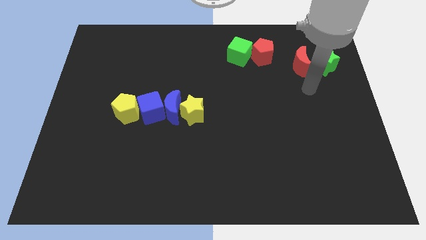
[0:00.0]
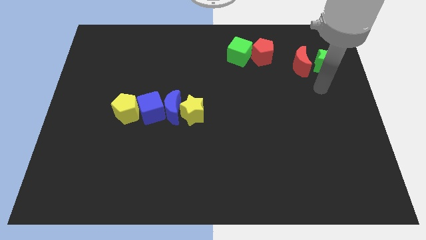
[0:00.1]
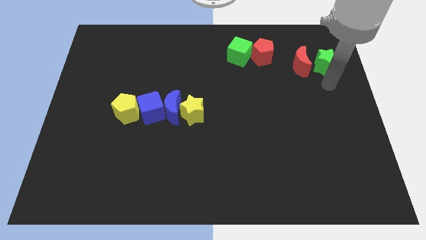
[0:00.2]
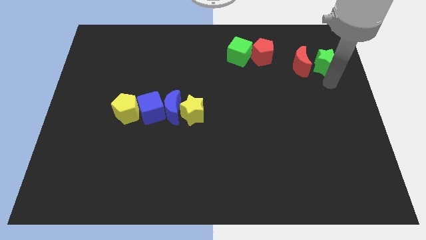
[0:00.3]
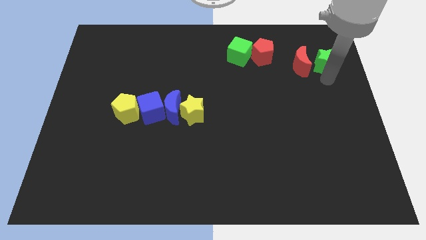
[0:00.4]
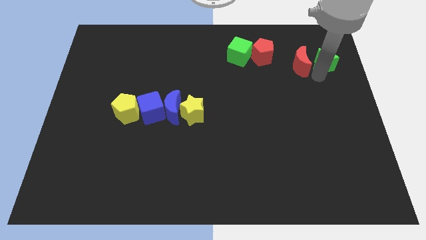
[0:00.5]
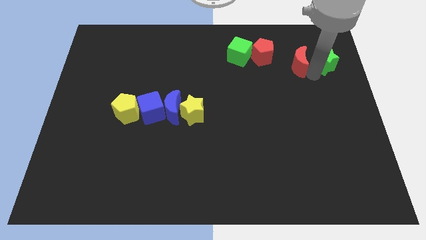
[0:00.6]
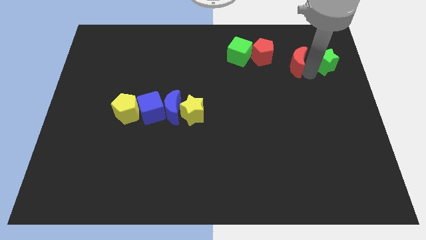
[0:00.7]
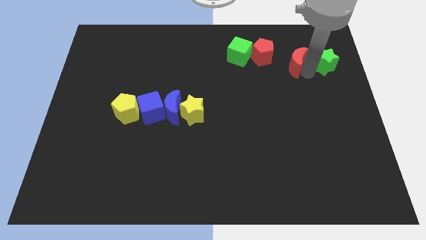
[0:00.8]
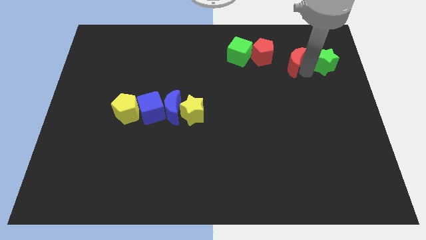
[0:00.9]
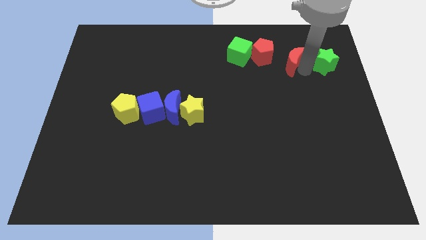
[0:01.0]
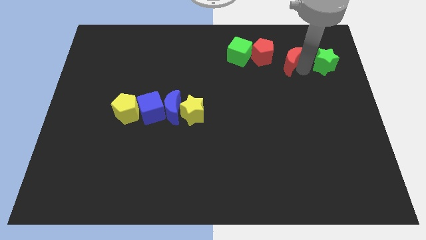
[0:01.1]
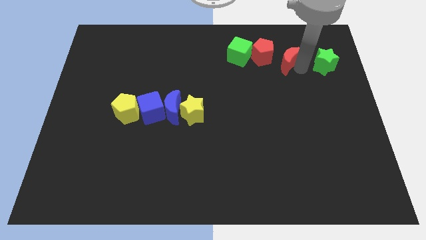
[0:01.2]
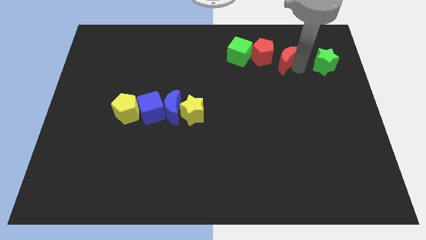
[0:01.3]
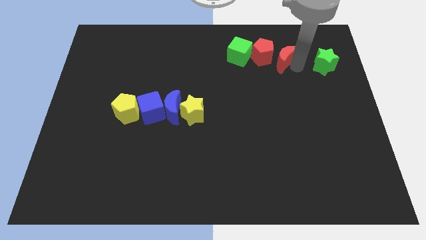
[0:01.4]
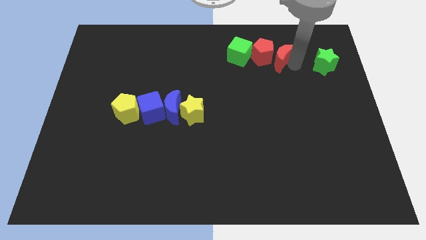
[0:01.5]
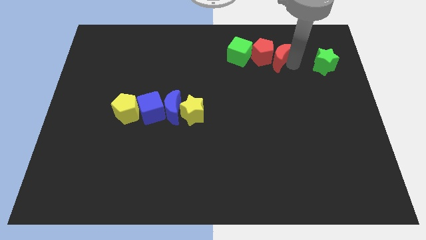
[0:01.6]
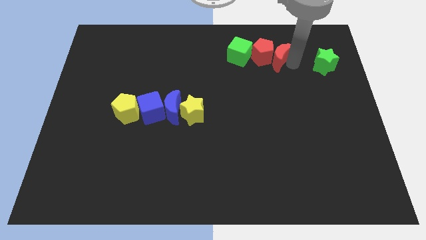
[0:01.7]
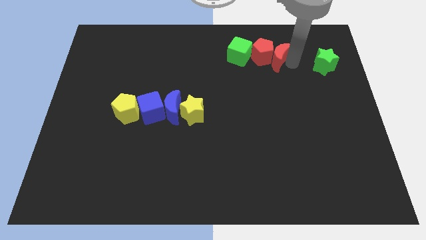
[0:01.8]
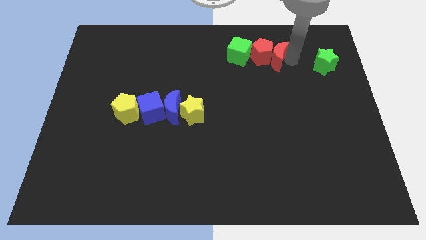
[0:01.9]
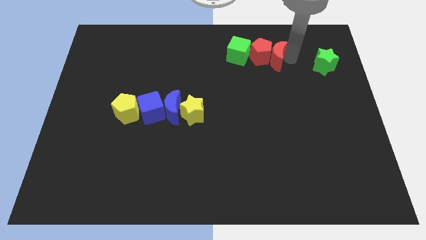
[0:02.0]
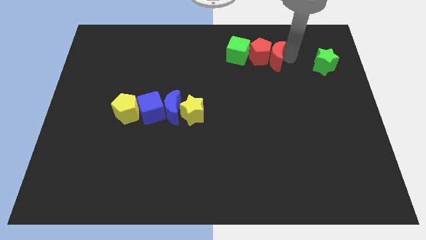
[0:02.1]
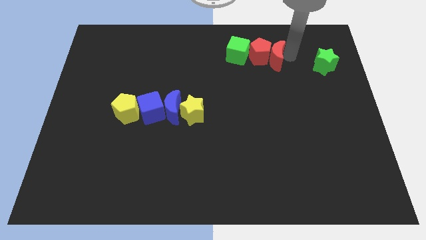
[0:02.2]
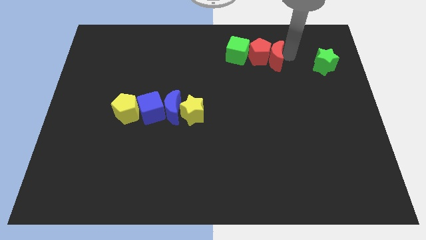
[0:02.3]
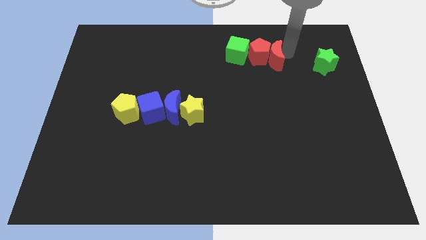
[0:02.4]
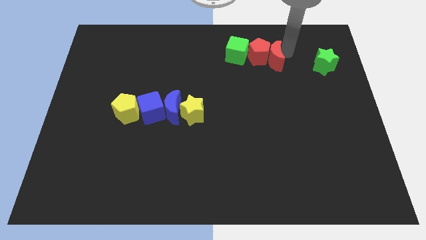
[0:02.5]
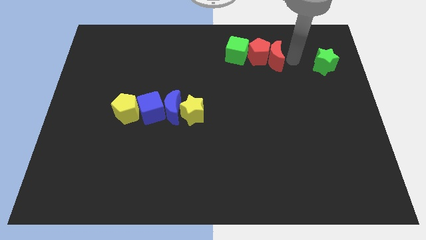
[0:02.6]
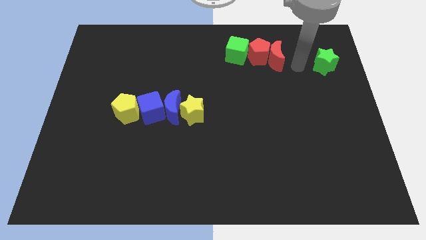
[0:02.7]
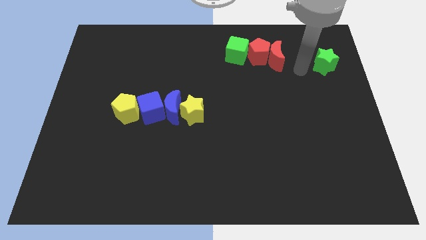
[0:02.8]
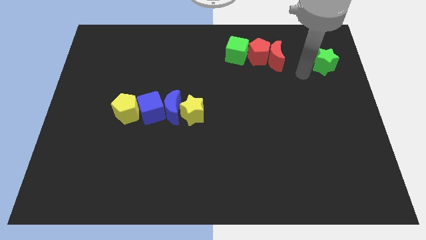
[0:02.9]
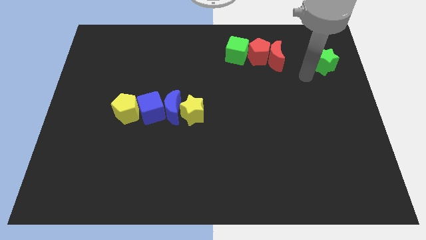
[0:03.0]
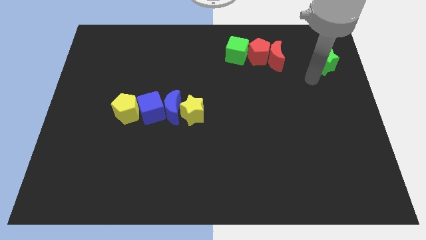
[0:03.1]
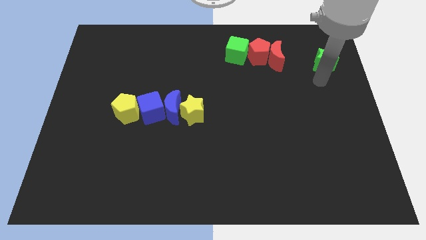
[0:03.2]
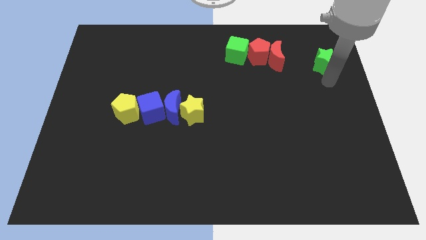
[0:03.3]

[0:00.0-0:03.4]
put the red moon into the red pentagon

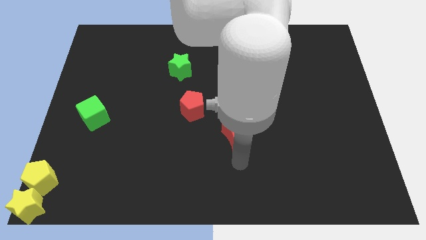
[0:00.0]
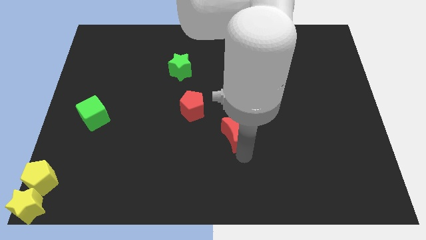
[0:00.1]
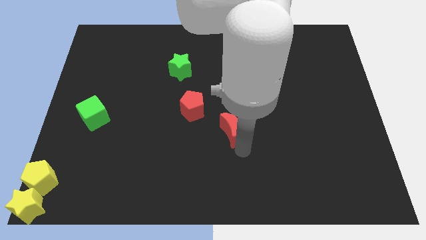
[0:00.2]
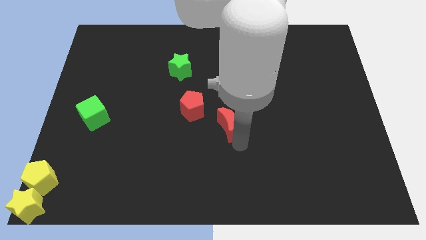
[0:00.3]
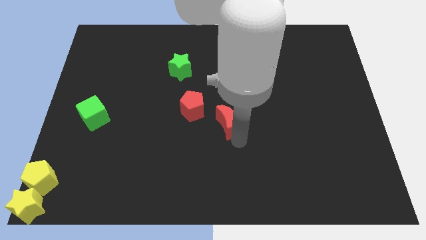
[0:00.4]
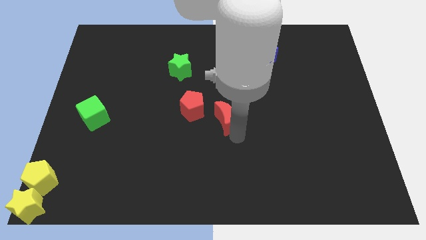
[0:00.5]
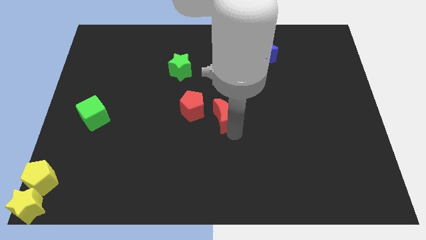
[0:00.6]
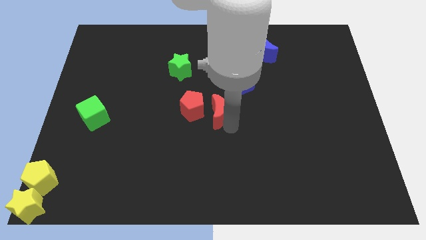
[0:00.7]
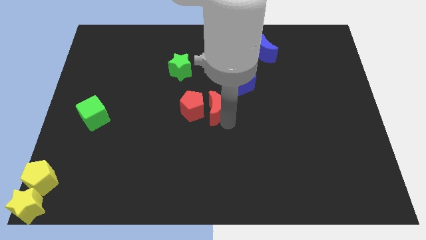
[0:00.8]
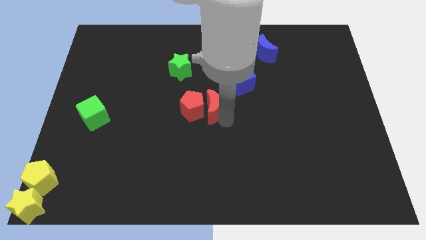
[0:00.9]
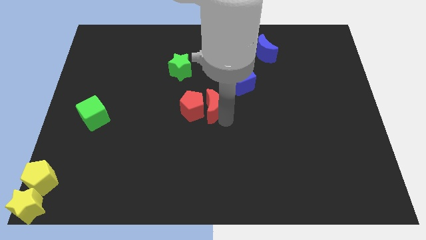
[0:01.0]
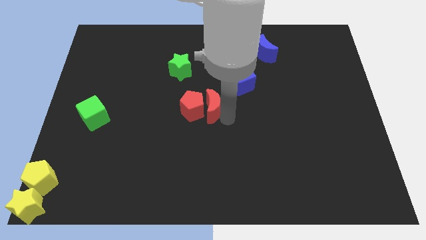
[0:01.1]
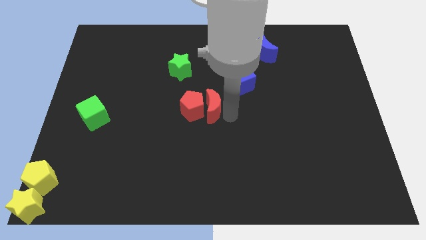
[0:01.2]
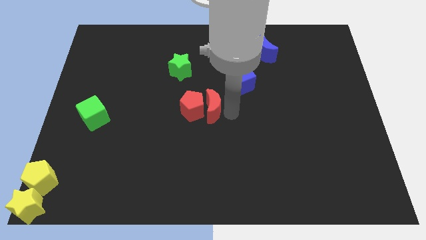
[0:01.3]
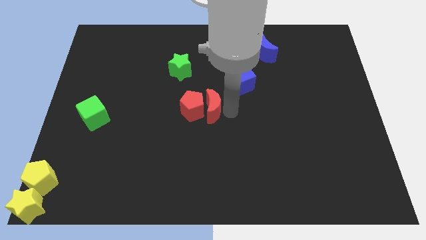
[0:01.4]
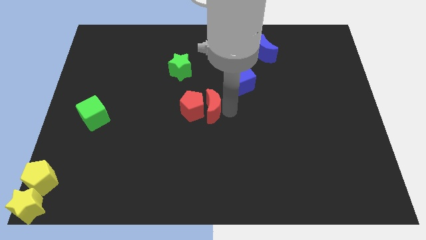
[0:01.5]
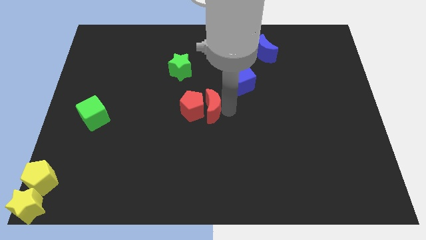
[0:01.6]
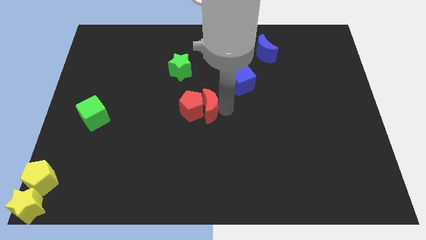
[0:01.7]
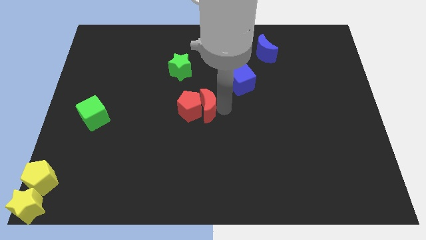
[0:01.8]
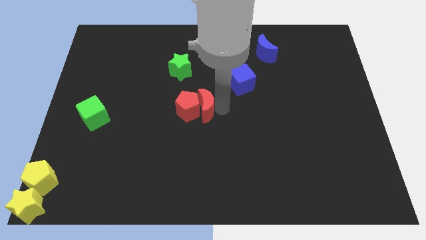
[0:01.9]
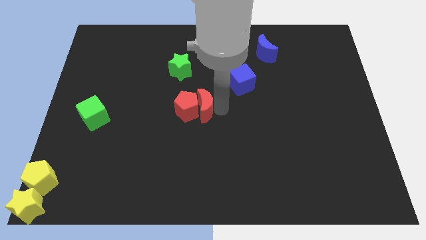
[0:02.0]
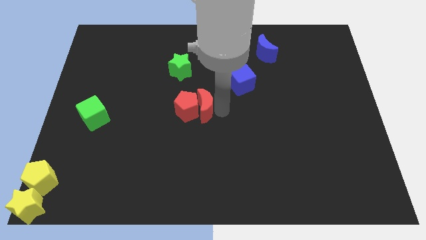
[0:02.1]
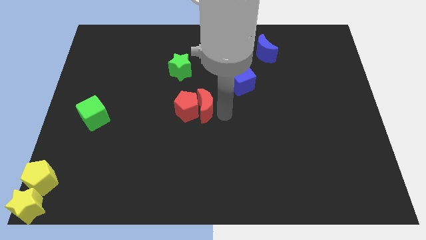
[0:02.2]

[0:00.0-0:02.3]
push the red moon into red pentagon

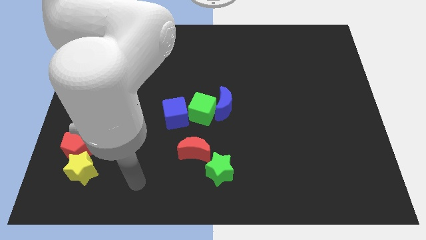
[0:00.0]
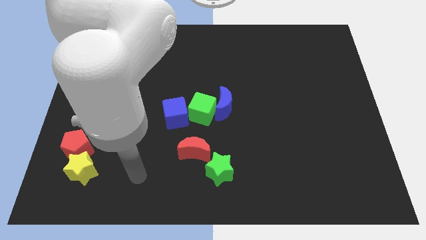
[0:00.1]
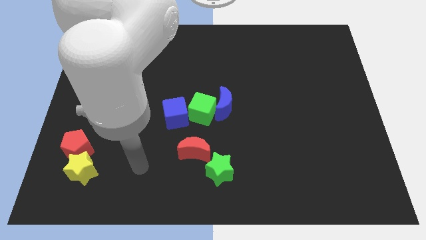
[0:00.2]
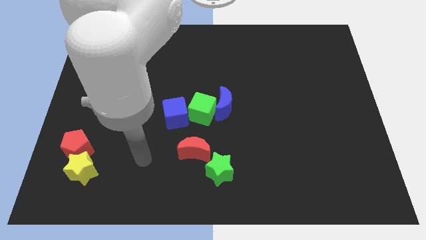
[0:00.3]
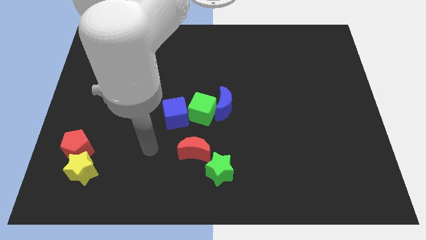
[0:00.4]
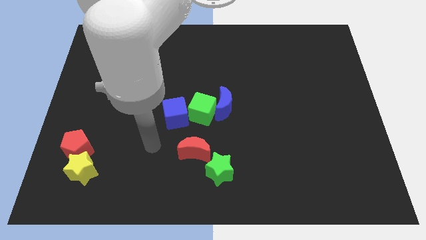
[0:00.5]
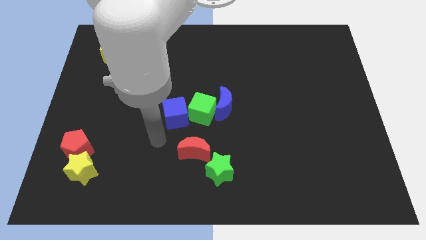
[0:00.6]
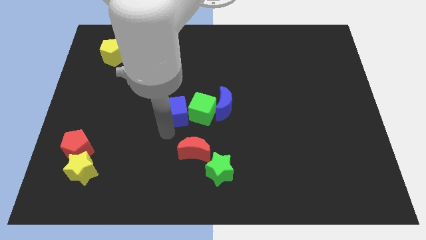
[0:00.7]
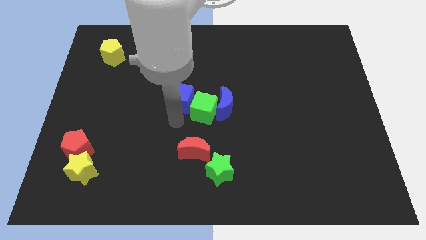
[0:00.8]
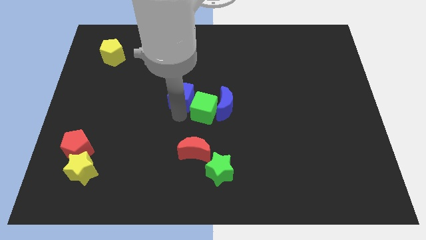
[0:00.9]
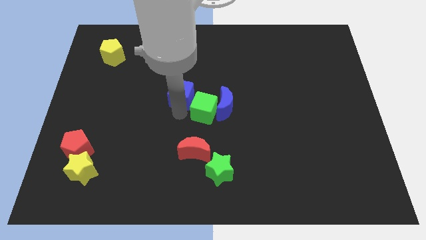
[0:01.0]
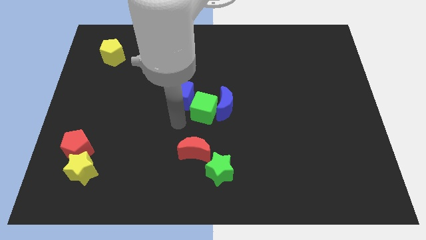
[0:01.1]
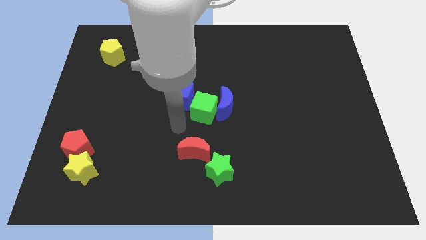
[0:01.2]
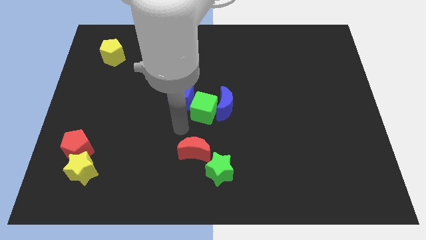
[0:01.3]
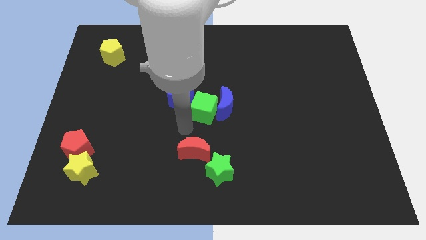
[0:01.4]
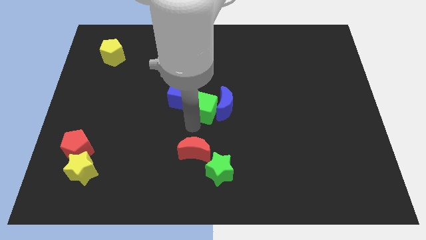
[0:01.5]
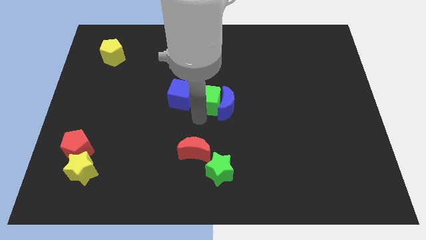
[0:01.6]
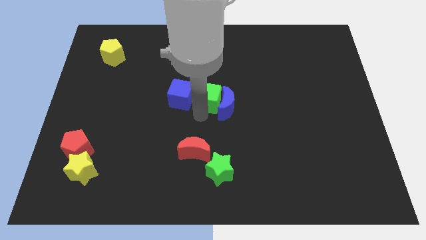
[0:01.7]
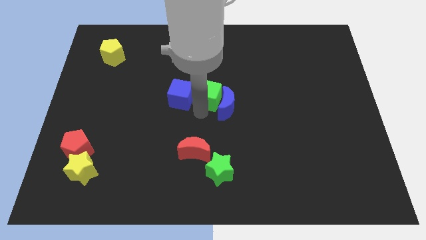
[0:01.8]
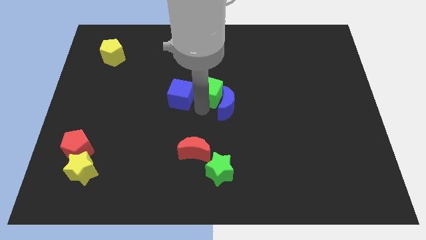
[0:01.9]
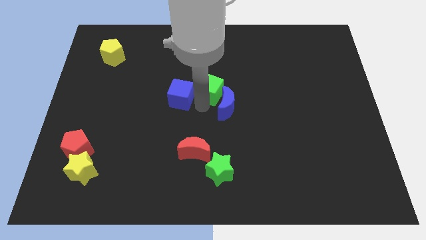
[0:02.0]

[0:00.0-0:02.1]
move the blue cube at the top left side of the green cube

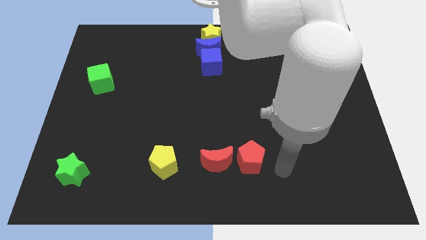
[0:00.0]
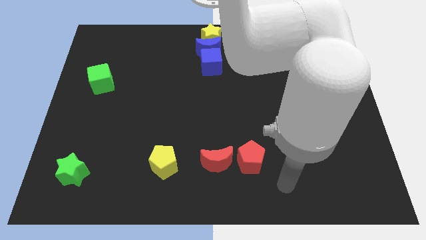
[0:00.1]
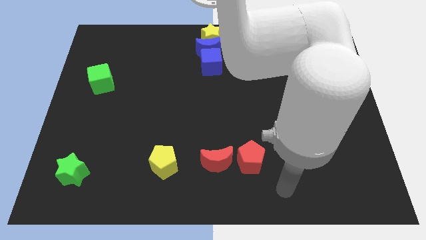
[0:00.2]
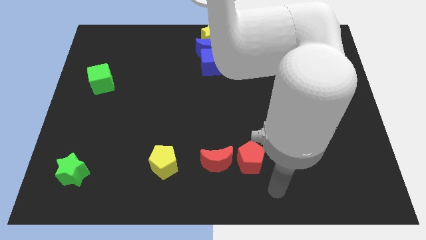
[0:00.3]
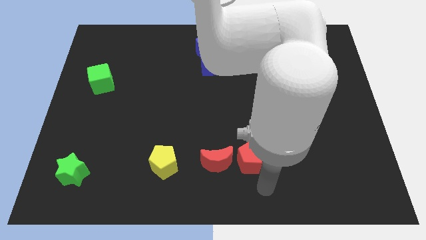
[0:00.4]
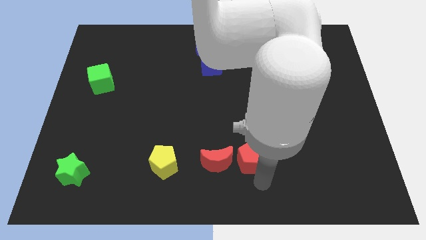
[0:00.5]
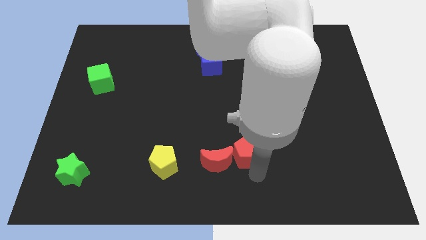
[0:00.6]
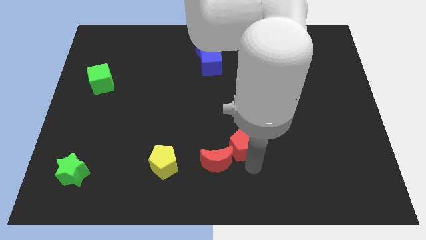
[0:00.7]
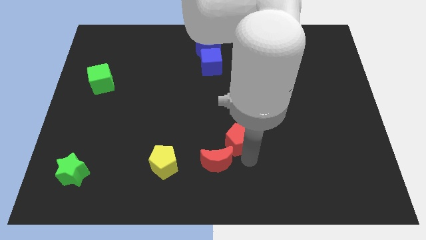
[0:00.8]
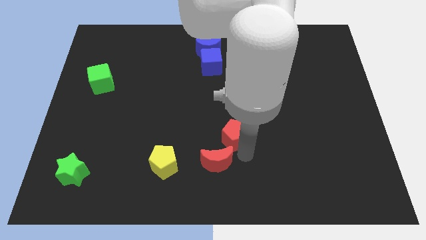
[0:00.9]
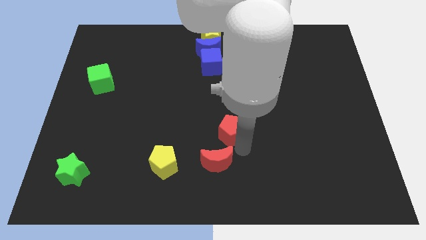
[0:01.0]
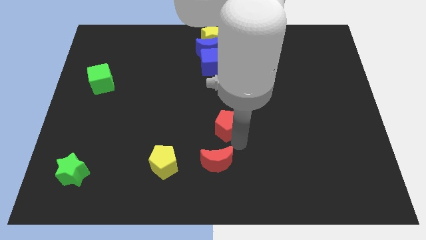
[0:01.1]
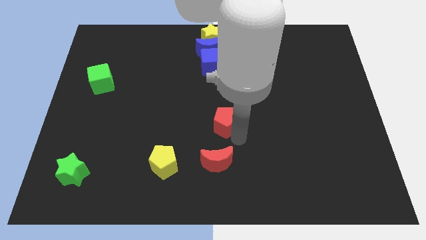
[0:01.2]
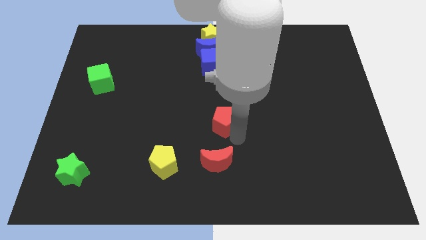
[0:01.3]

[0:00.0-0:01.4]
separate the red pentagon from the red crescent
